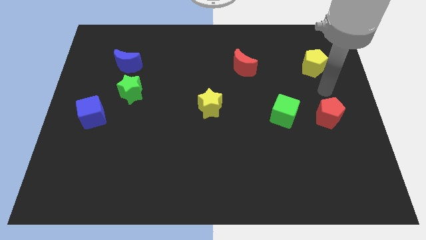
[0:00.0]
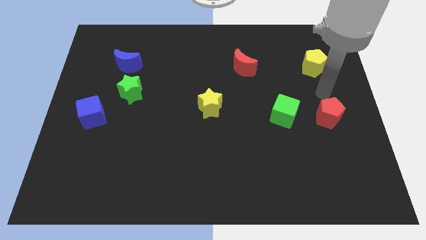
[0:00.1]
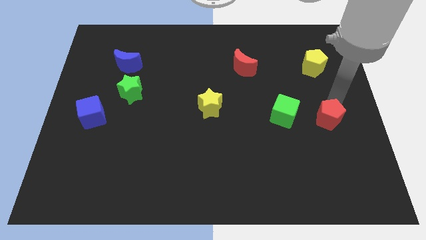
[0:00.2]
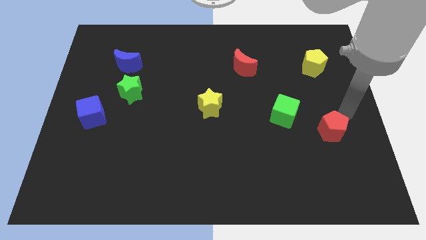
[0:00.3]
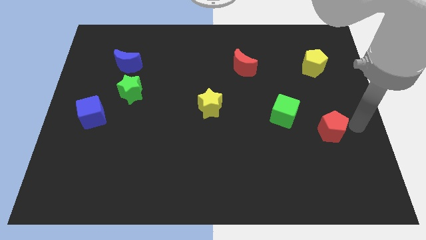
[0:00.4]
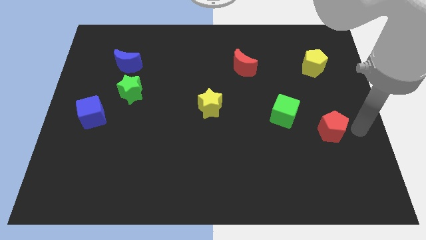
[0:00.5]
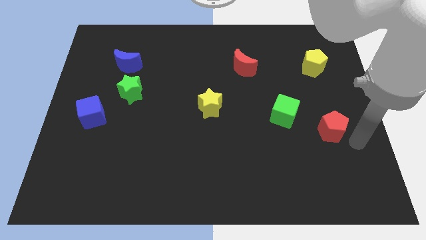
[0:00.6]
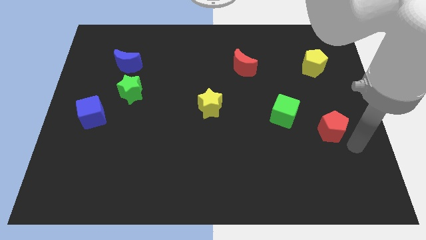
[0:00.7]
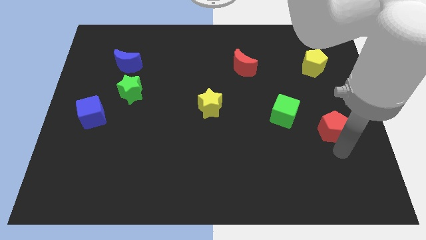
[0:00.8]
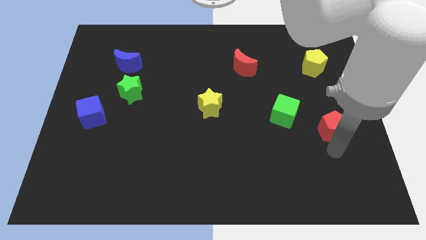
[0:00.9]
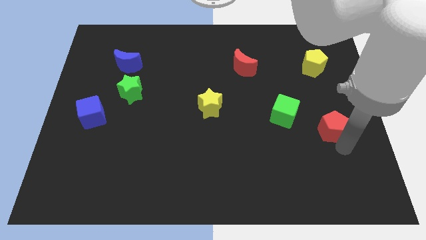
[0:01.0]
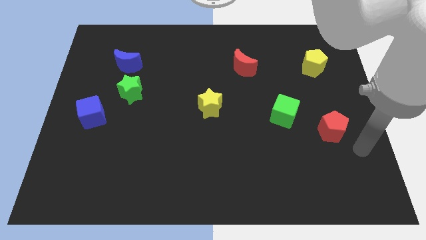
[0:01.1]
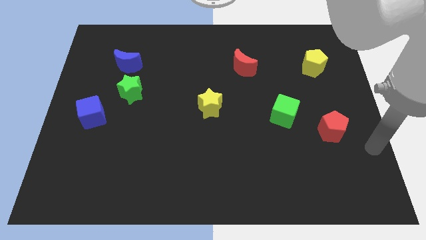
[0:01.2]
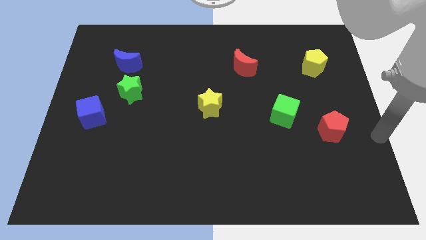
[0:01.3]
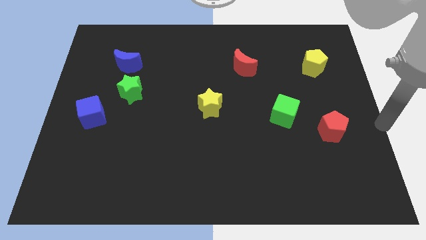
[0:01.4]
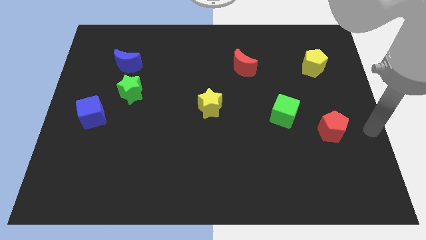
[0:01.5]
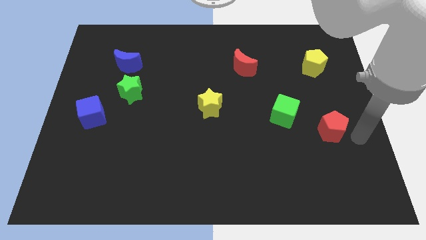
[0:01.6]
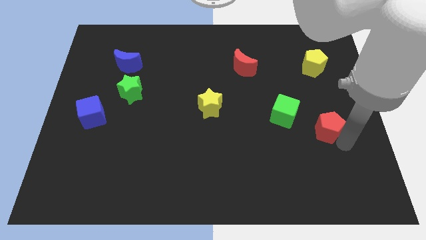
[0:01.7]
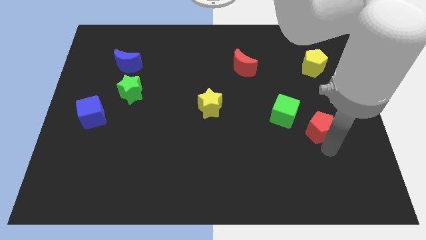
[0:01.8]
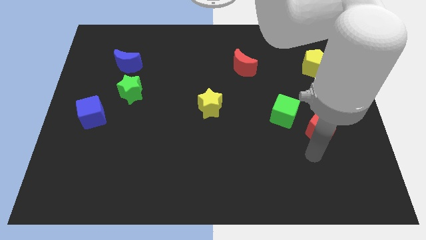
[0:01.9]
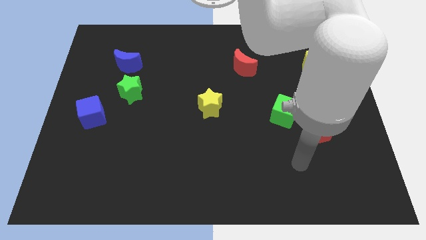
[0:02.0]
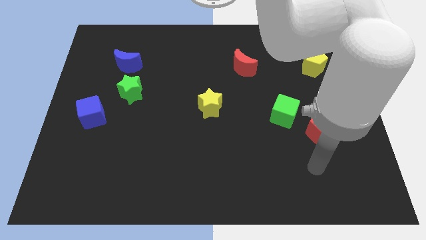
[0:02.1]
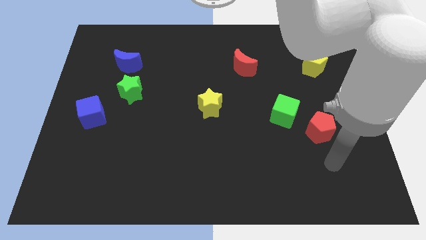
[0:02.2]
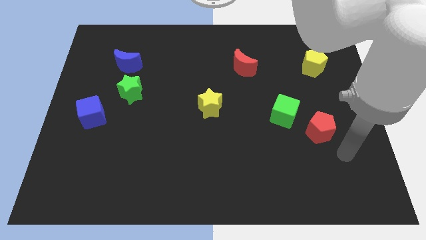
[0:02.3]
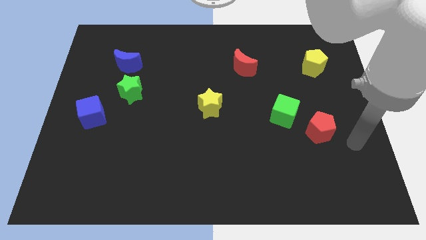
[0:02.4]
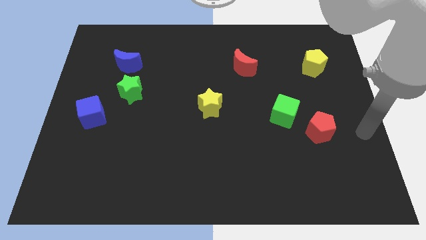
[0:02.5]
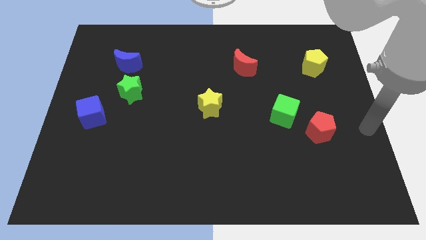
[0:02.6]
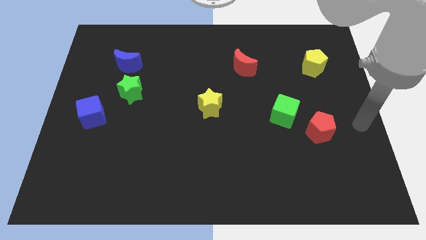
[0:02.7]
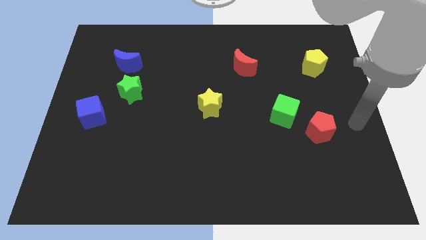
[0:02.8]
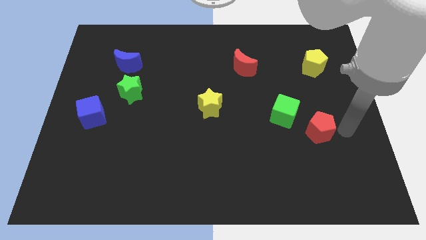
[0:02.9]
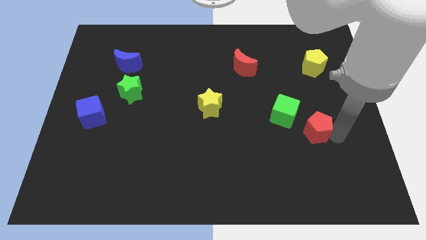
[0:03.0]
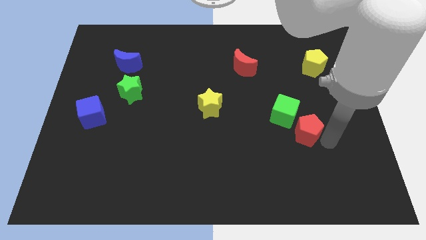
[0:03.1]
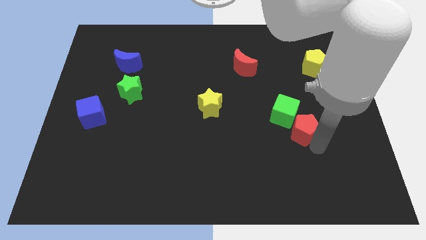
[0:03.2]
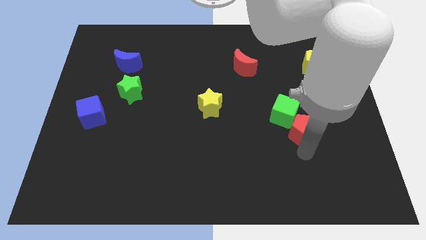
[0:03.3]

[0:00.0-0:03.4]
move the red pentagon into the green cube

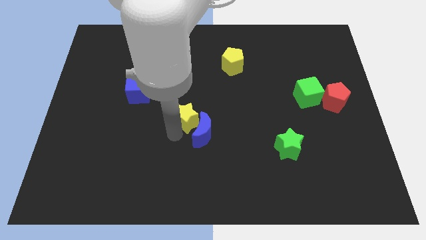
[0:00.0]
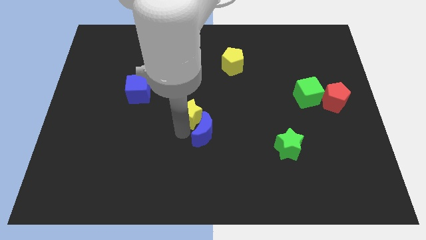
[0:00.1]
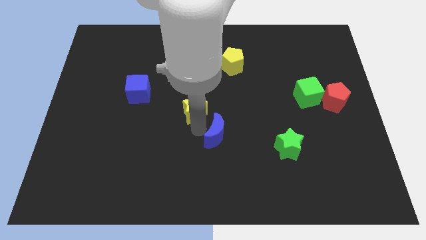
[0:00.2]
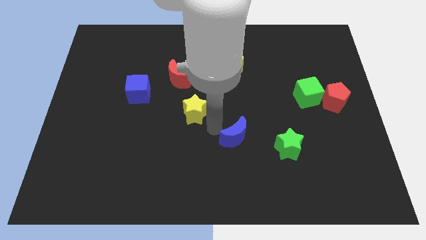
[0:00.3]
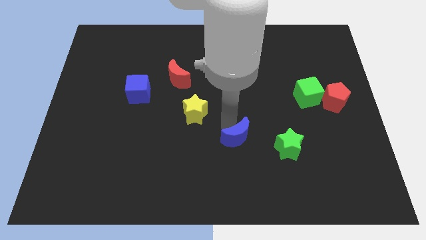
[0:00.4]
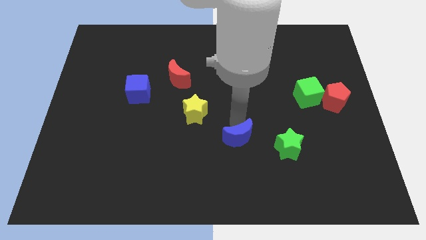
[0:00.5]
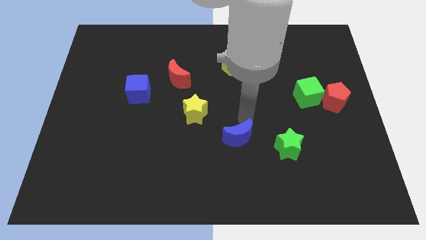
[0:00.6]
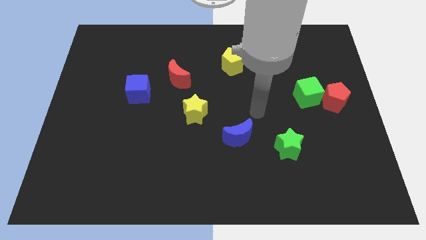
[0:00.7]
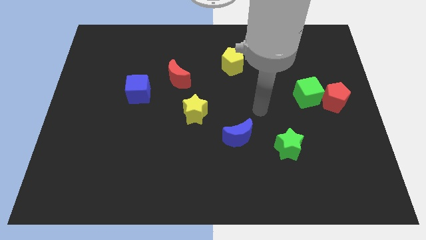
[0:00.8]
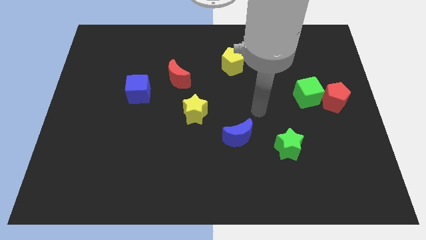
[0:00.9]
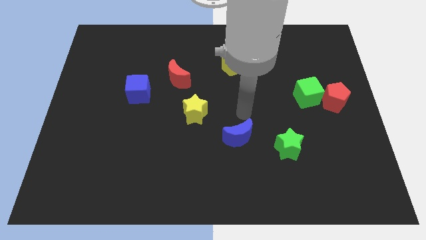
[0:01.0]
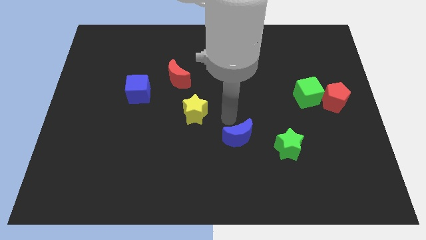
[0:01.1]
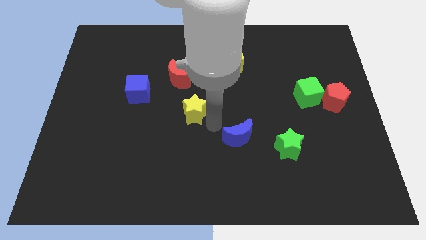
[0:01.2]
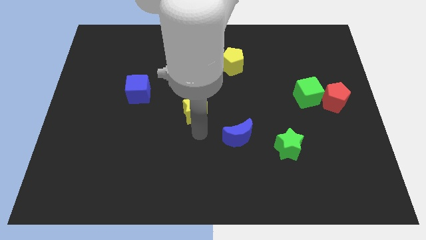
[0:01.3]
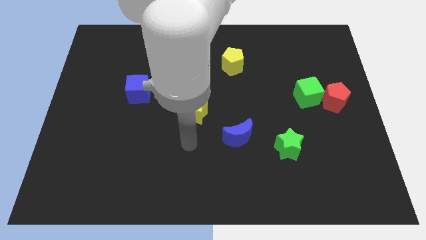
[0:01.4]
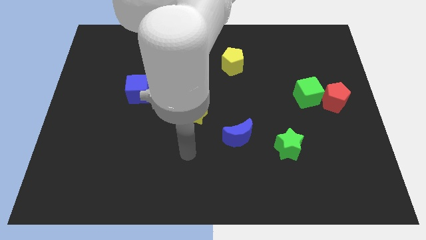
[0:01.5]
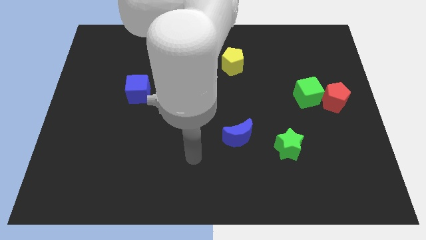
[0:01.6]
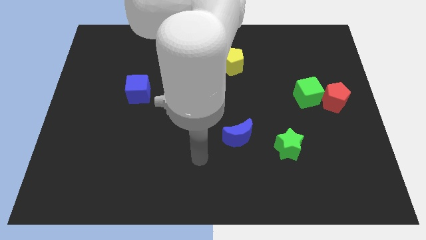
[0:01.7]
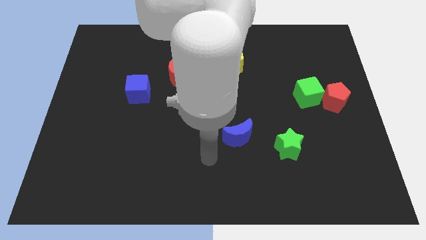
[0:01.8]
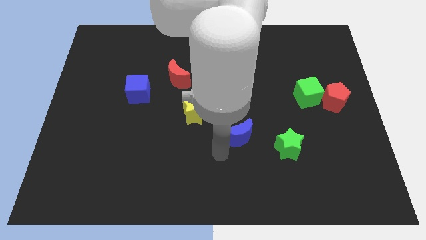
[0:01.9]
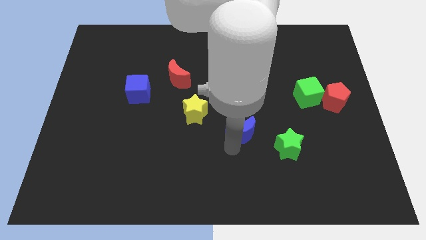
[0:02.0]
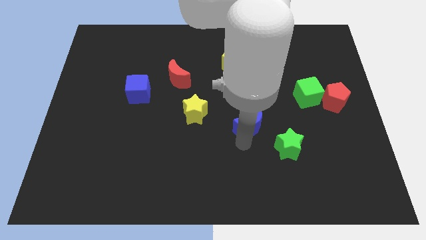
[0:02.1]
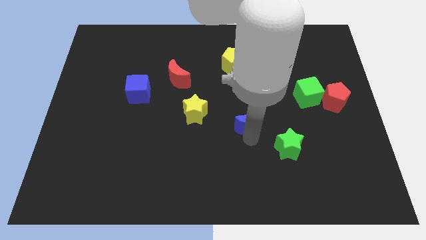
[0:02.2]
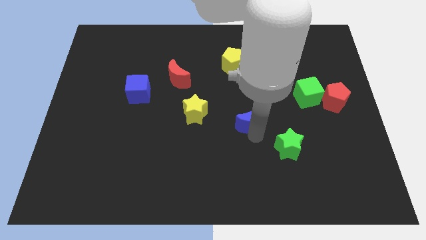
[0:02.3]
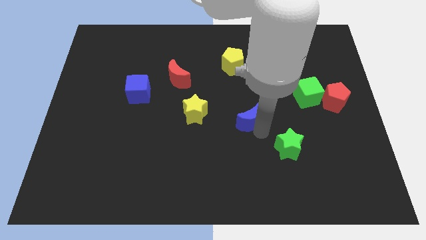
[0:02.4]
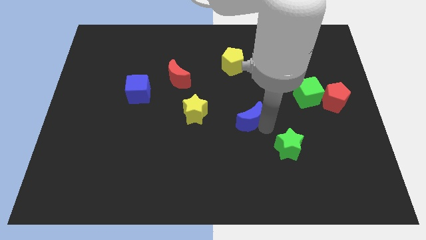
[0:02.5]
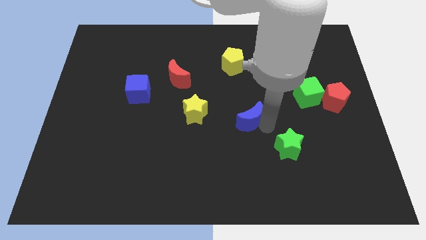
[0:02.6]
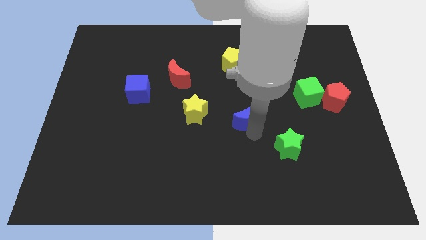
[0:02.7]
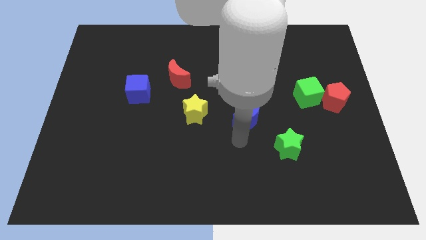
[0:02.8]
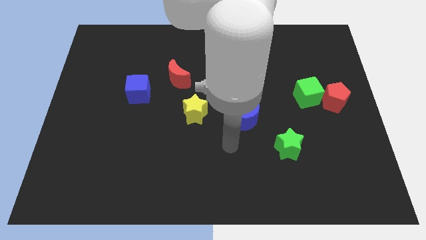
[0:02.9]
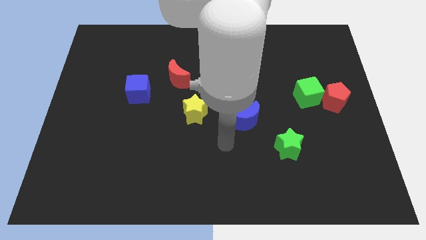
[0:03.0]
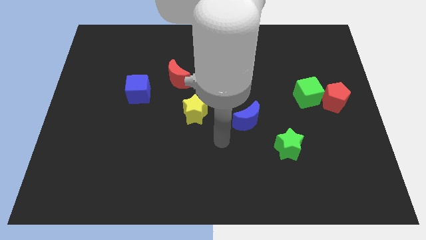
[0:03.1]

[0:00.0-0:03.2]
move the blue moon diagonally to the left of the green star

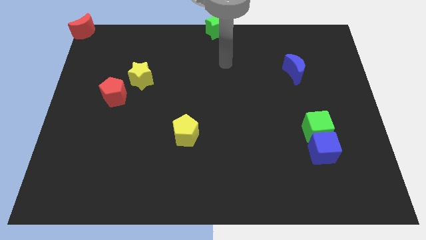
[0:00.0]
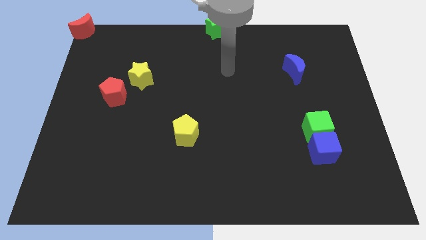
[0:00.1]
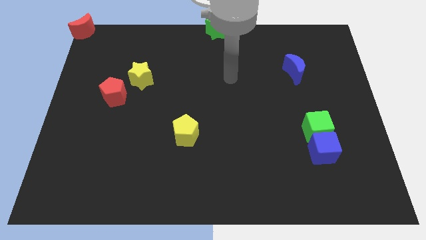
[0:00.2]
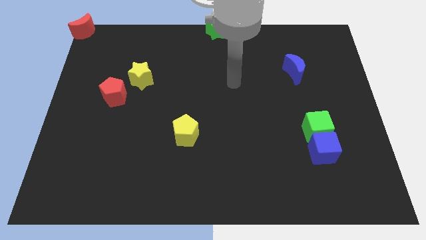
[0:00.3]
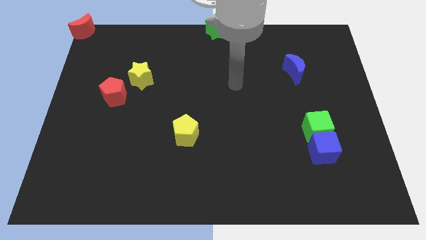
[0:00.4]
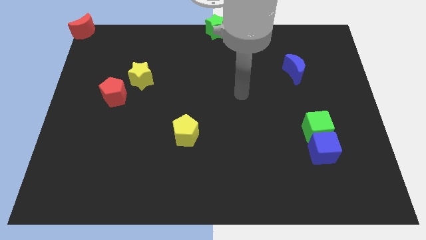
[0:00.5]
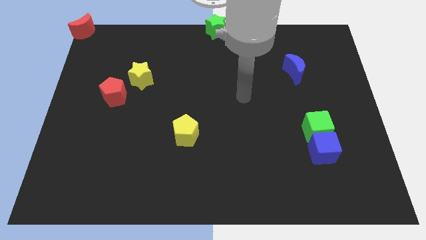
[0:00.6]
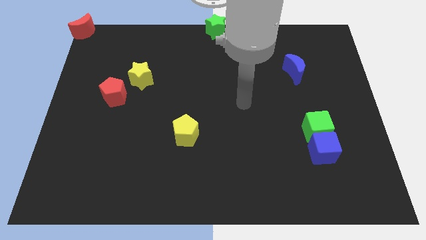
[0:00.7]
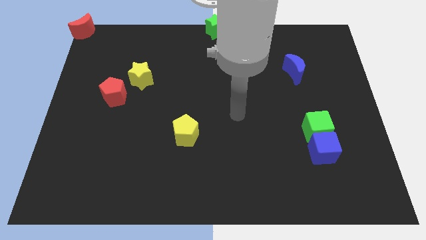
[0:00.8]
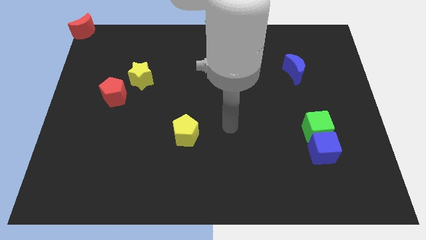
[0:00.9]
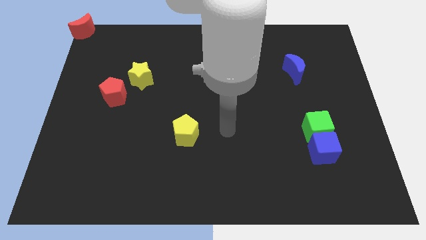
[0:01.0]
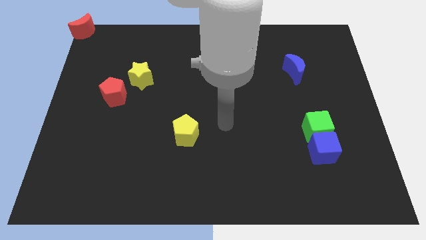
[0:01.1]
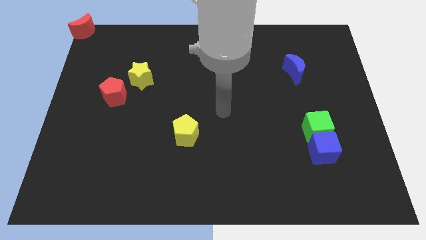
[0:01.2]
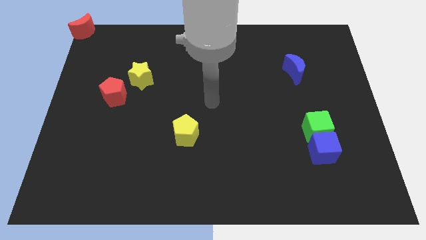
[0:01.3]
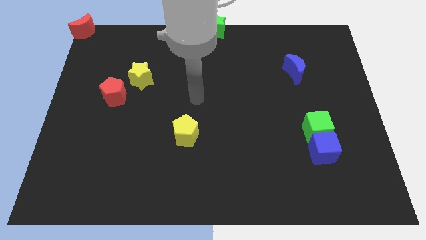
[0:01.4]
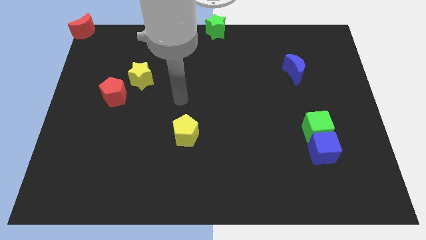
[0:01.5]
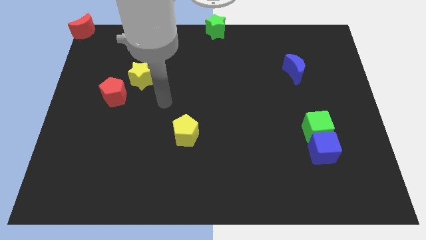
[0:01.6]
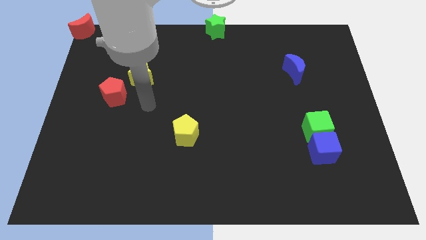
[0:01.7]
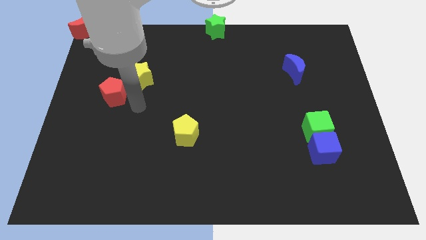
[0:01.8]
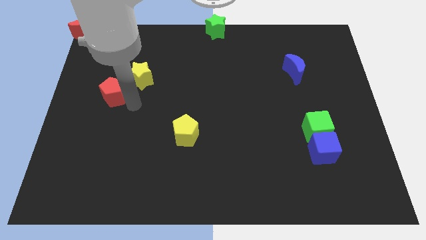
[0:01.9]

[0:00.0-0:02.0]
move your arm towards the bottom side of the red pentagon and the yellow star

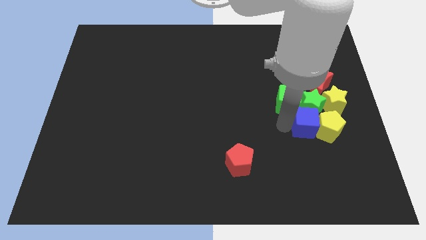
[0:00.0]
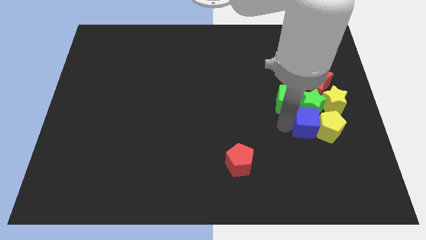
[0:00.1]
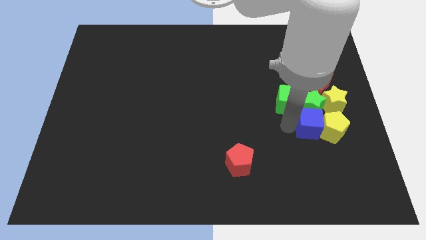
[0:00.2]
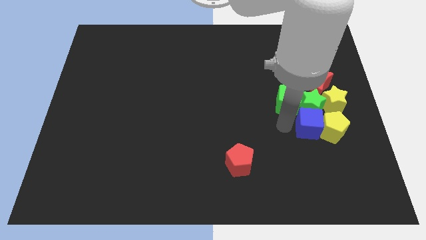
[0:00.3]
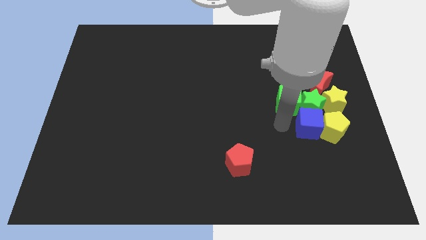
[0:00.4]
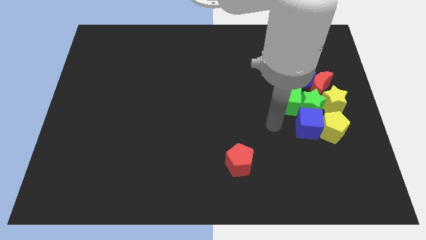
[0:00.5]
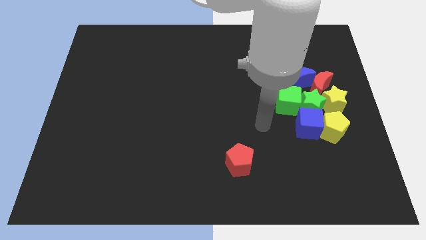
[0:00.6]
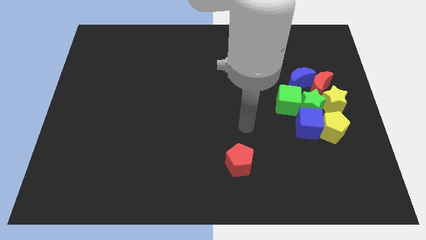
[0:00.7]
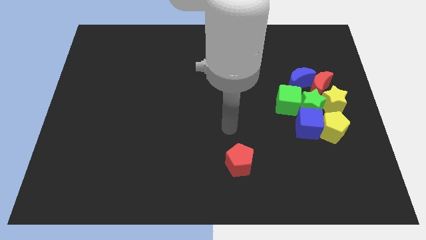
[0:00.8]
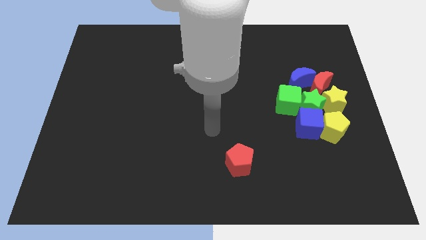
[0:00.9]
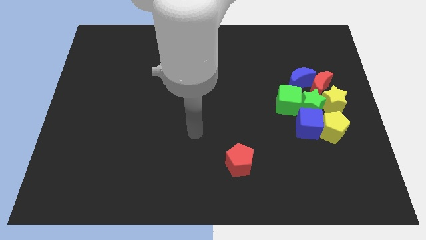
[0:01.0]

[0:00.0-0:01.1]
slide your arm towards center
